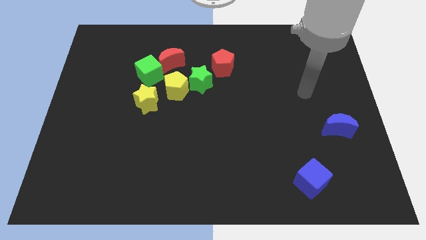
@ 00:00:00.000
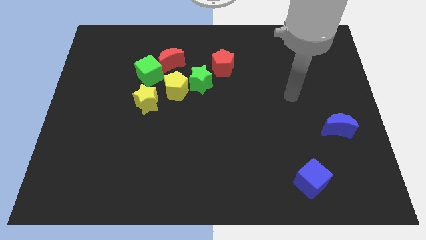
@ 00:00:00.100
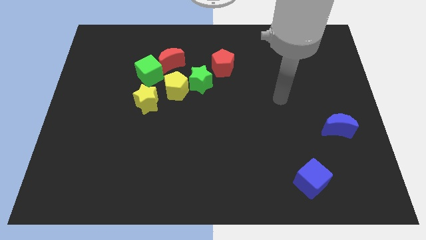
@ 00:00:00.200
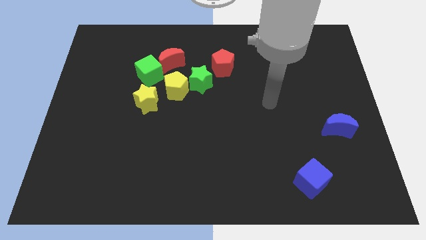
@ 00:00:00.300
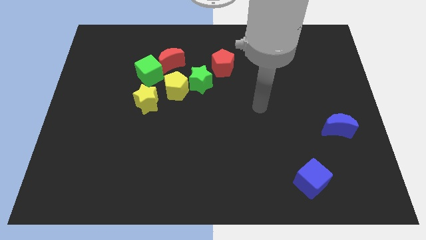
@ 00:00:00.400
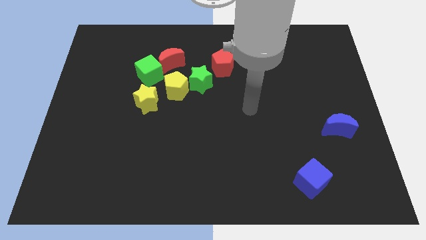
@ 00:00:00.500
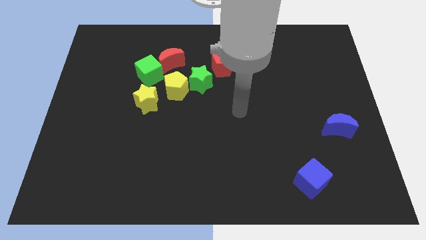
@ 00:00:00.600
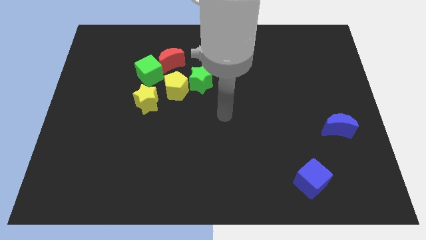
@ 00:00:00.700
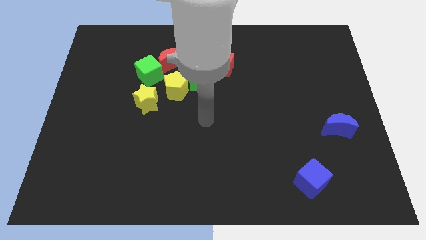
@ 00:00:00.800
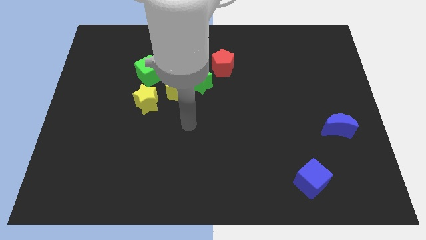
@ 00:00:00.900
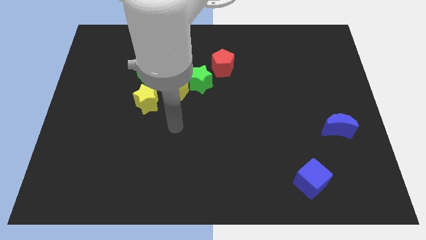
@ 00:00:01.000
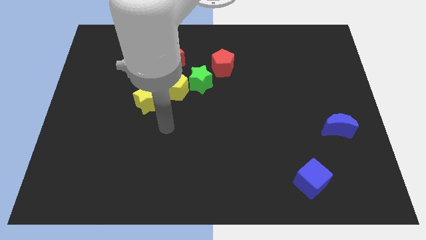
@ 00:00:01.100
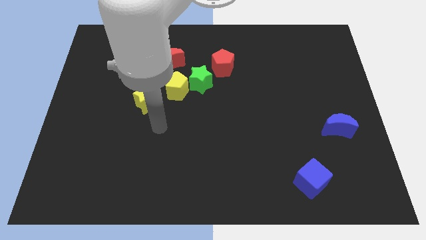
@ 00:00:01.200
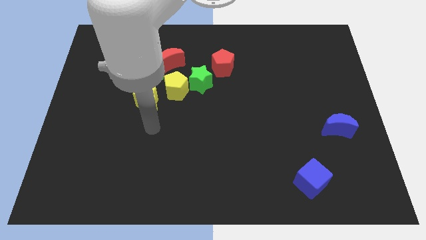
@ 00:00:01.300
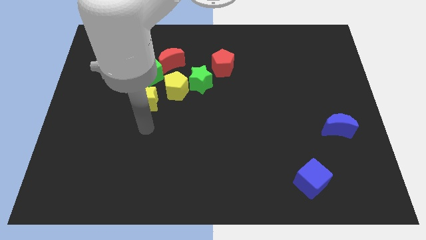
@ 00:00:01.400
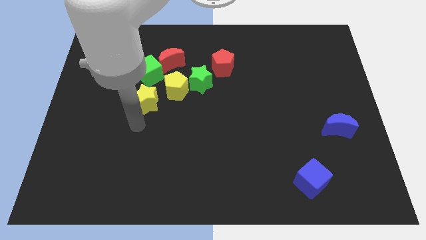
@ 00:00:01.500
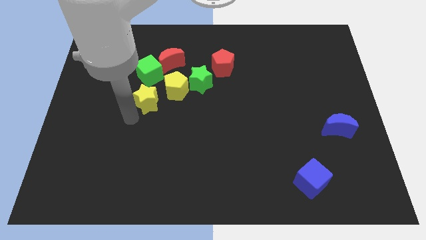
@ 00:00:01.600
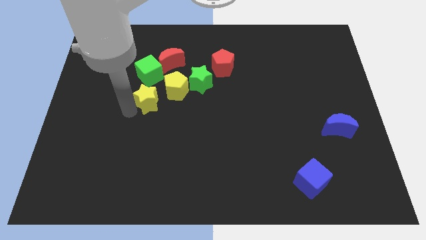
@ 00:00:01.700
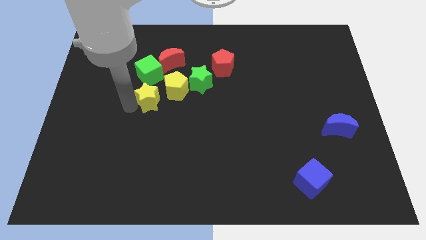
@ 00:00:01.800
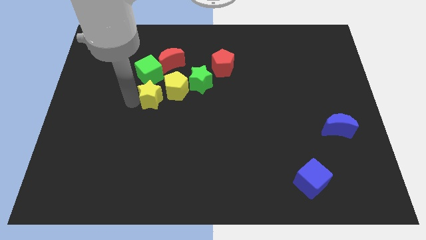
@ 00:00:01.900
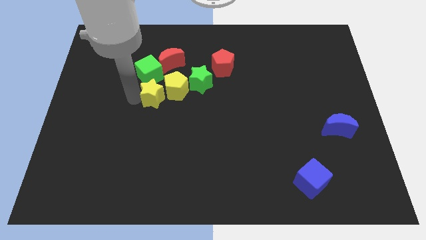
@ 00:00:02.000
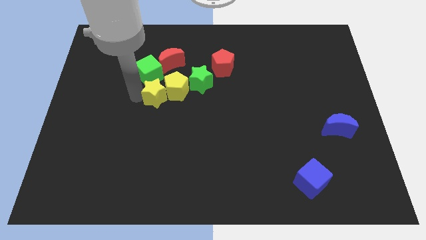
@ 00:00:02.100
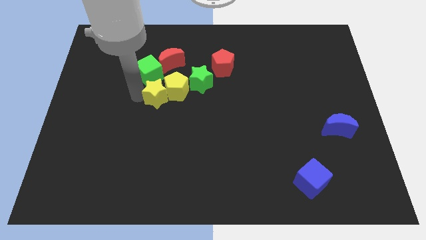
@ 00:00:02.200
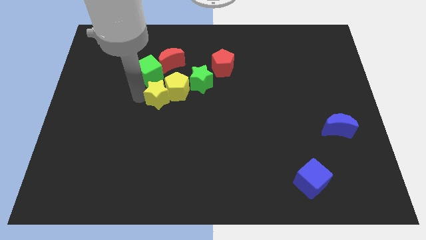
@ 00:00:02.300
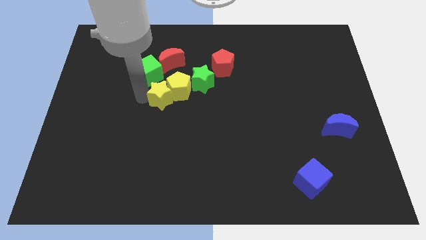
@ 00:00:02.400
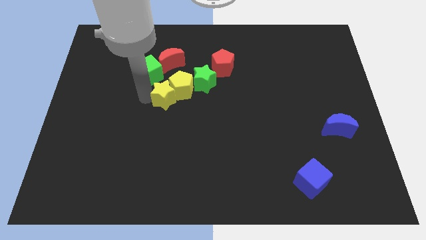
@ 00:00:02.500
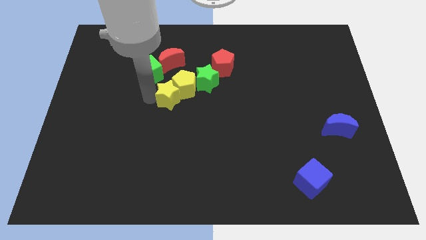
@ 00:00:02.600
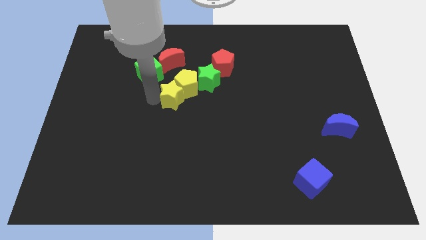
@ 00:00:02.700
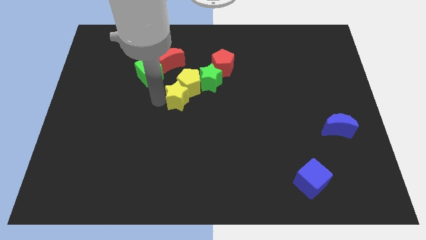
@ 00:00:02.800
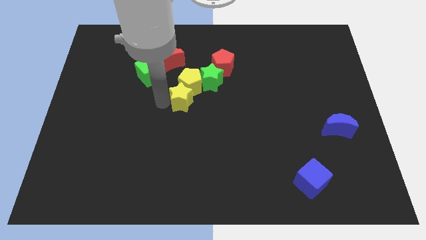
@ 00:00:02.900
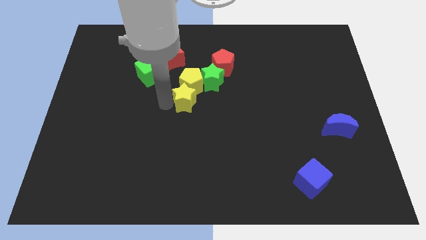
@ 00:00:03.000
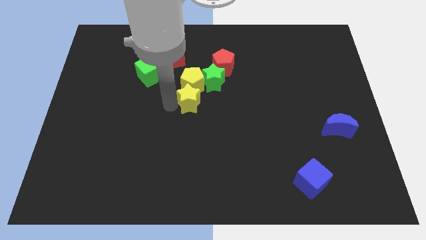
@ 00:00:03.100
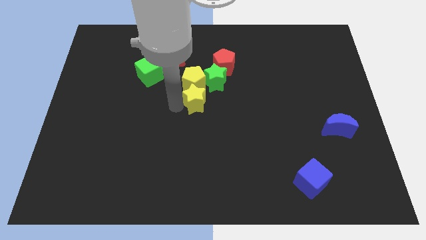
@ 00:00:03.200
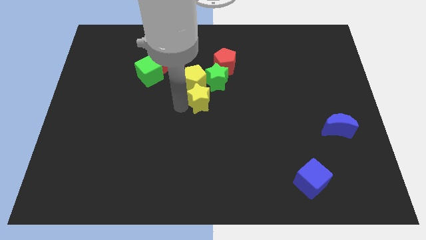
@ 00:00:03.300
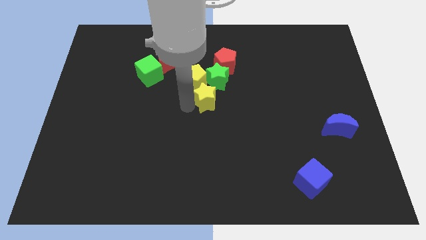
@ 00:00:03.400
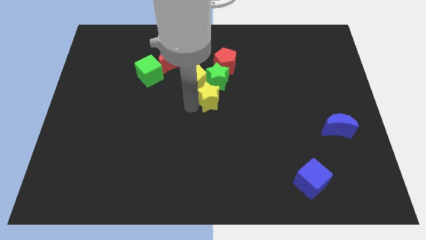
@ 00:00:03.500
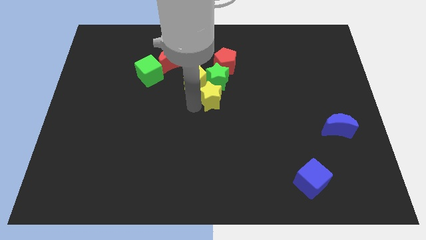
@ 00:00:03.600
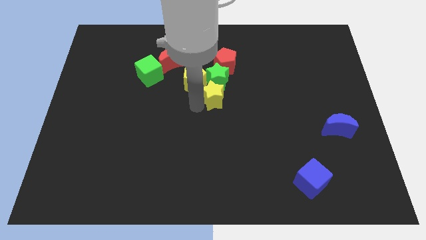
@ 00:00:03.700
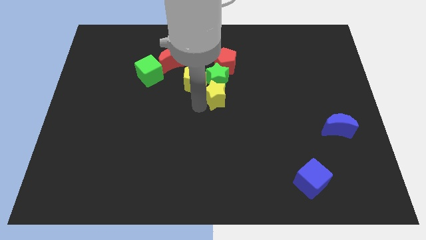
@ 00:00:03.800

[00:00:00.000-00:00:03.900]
push the yellow star to the green star

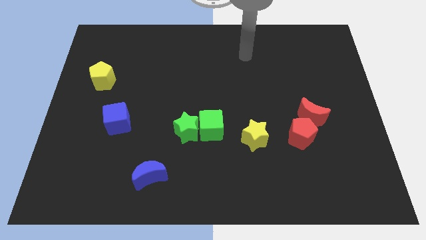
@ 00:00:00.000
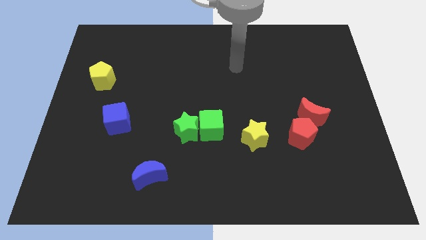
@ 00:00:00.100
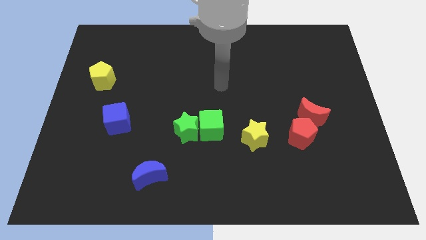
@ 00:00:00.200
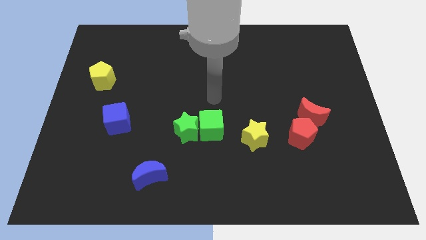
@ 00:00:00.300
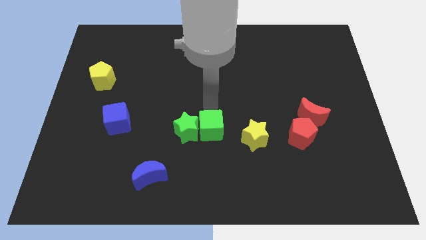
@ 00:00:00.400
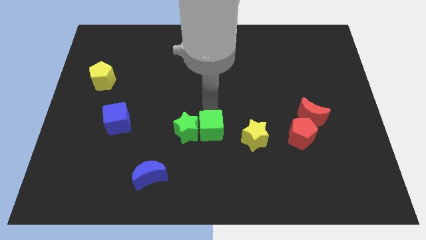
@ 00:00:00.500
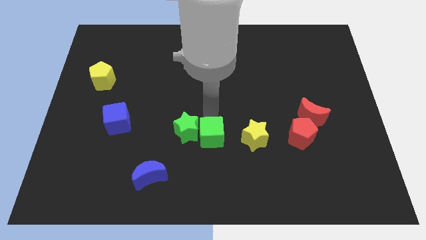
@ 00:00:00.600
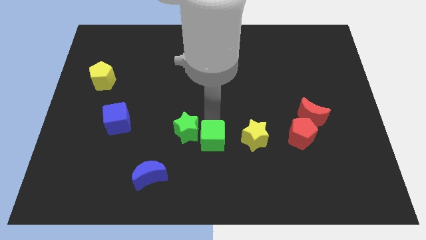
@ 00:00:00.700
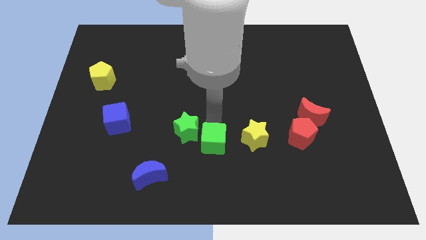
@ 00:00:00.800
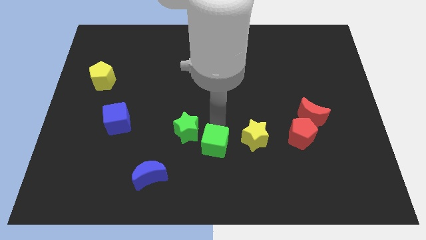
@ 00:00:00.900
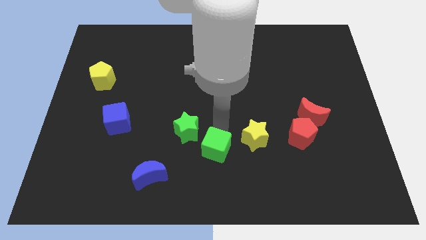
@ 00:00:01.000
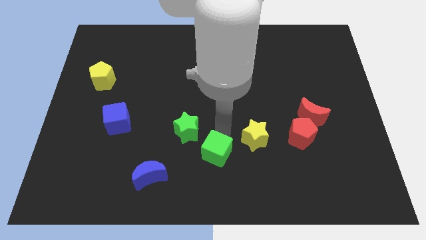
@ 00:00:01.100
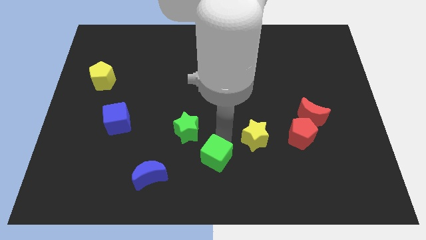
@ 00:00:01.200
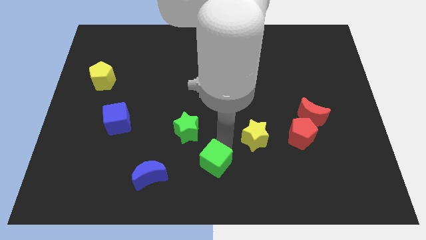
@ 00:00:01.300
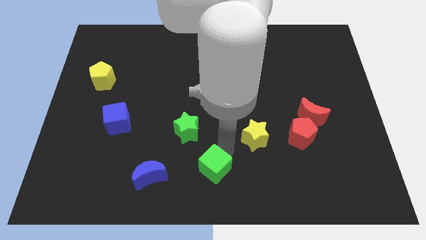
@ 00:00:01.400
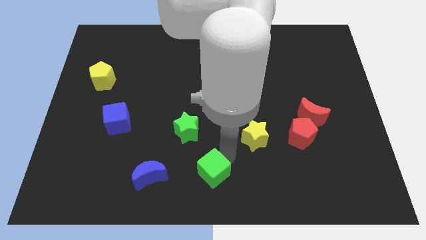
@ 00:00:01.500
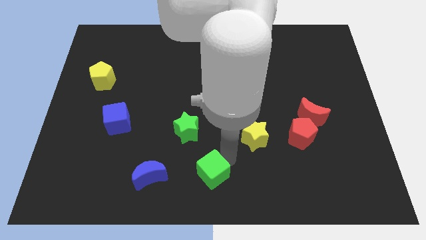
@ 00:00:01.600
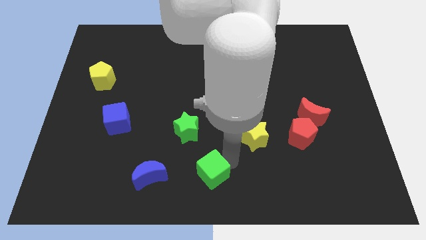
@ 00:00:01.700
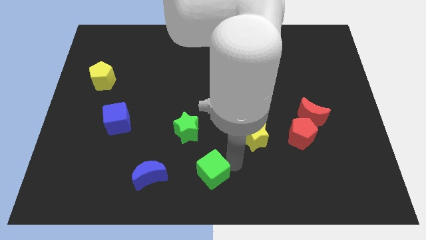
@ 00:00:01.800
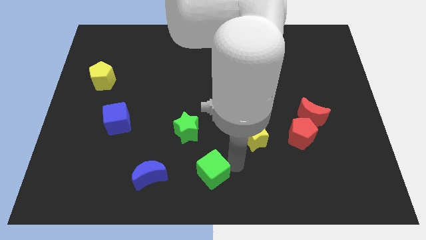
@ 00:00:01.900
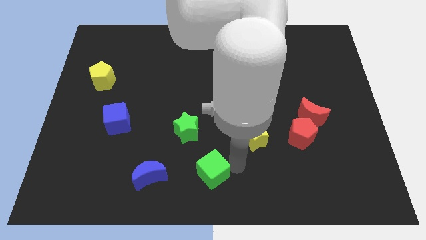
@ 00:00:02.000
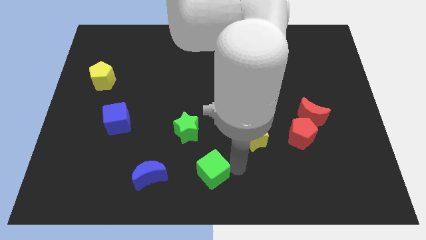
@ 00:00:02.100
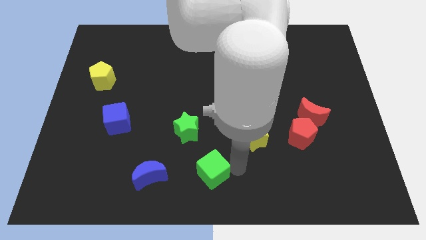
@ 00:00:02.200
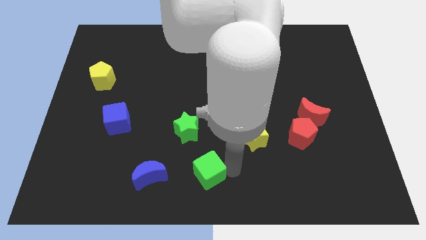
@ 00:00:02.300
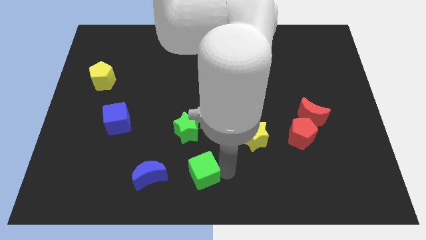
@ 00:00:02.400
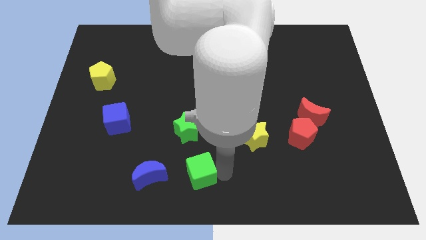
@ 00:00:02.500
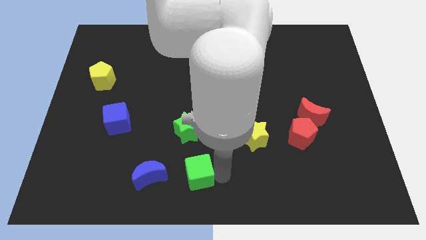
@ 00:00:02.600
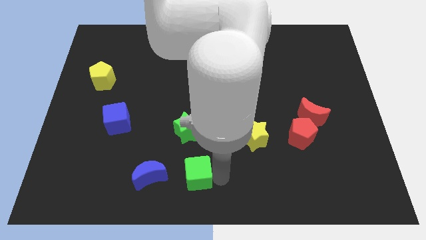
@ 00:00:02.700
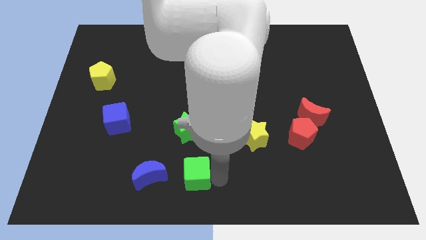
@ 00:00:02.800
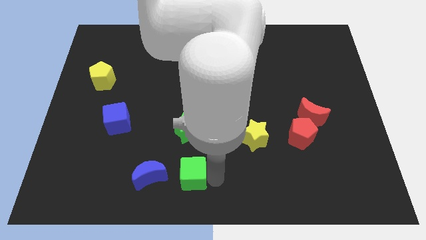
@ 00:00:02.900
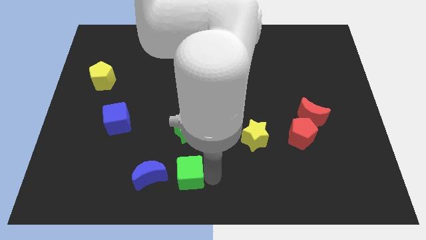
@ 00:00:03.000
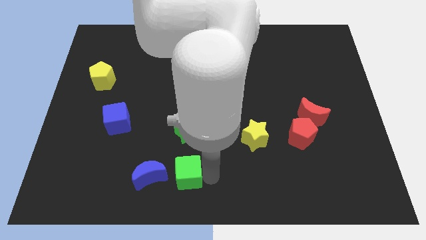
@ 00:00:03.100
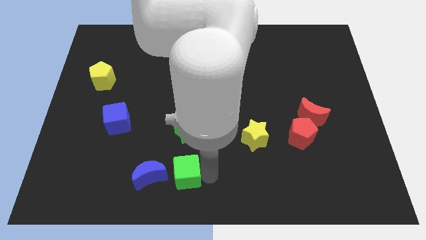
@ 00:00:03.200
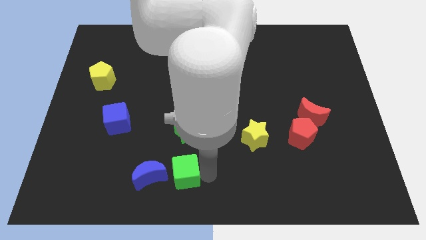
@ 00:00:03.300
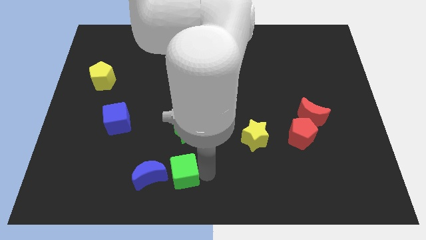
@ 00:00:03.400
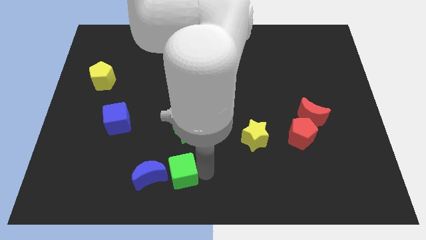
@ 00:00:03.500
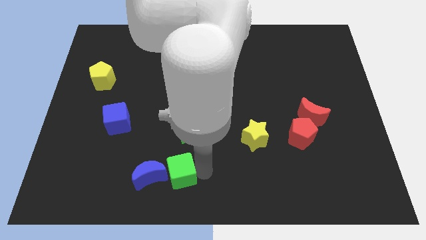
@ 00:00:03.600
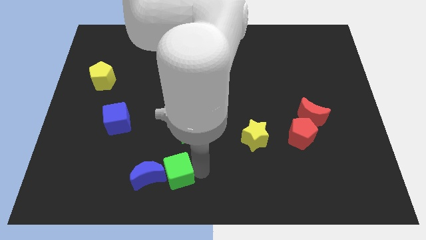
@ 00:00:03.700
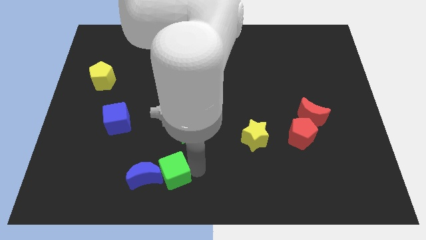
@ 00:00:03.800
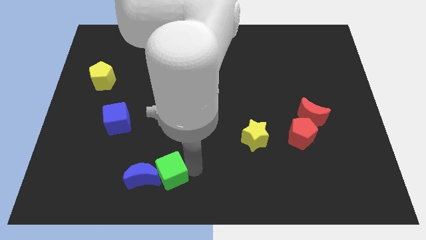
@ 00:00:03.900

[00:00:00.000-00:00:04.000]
push the green cube to the blue moon

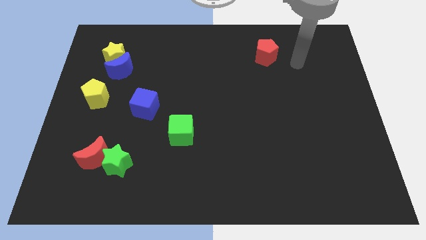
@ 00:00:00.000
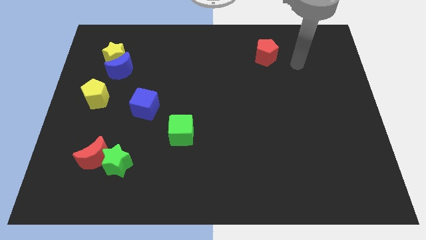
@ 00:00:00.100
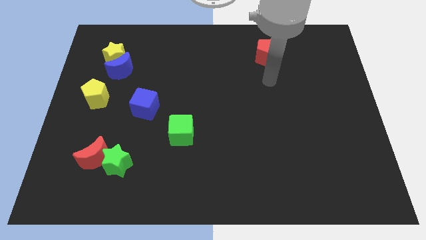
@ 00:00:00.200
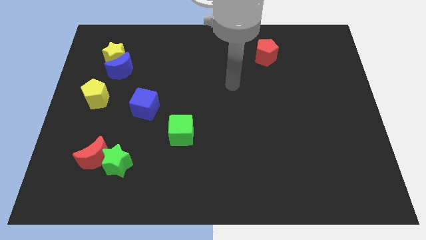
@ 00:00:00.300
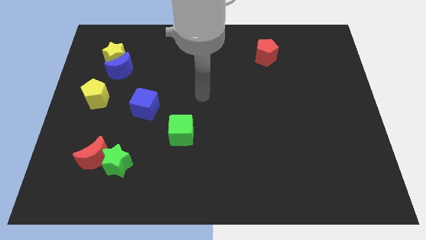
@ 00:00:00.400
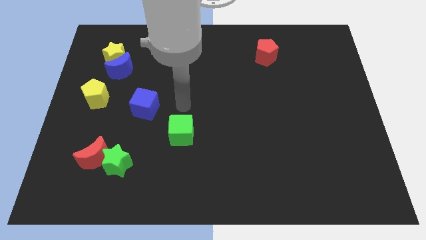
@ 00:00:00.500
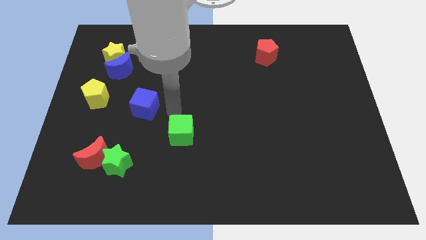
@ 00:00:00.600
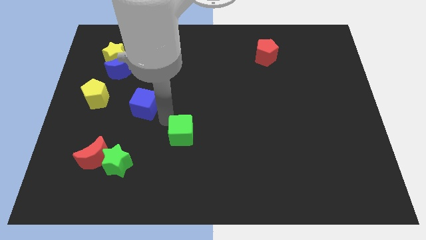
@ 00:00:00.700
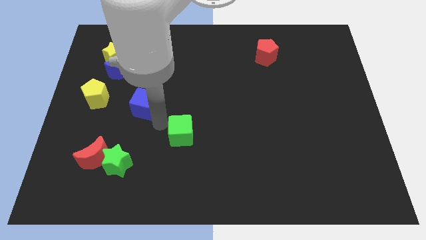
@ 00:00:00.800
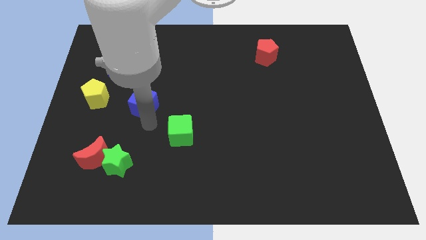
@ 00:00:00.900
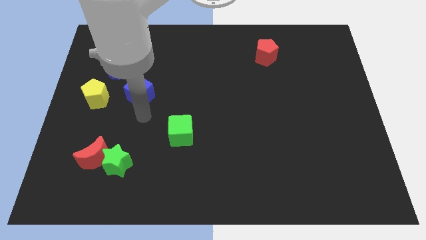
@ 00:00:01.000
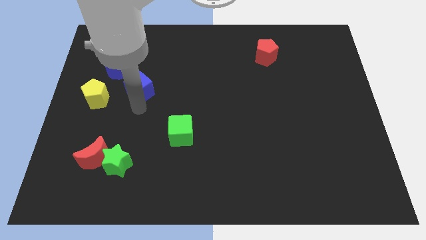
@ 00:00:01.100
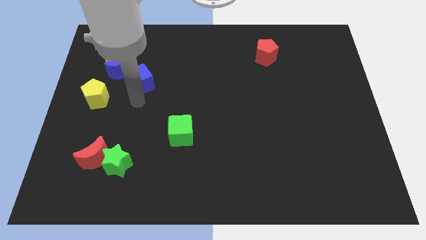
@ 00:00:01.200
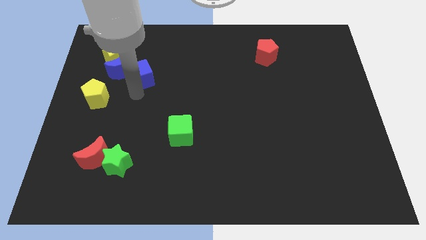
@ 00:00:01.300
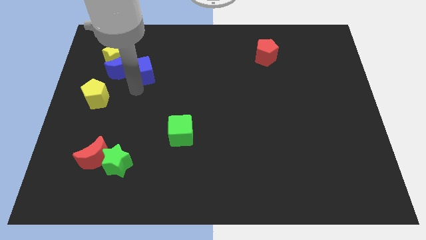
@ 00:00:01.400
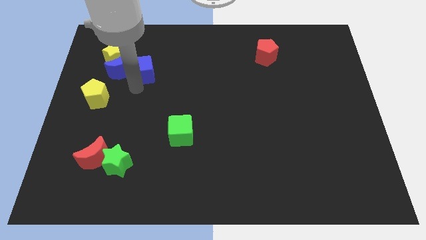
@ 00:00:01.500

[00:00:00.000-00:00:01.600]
slide the blue cube towards the blue moon
